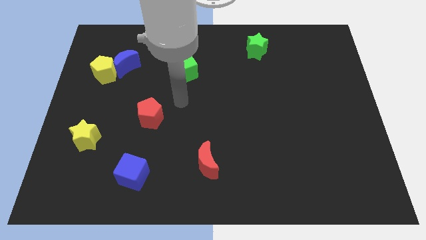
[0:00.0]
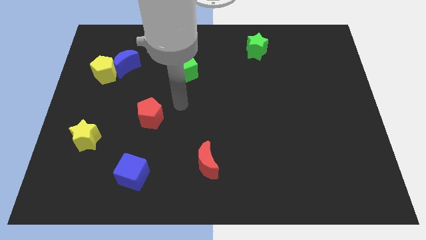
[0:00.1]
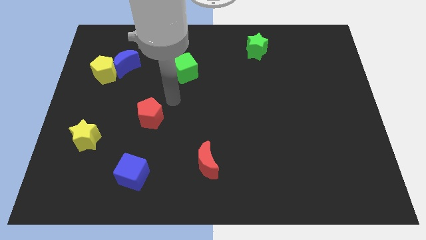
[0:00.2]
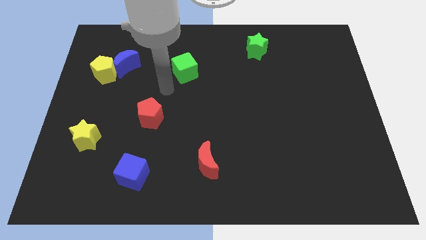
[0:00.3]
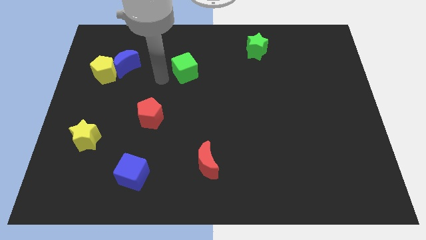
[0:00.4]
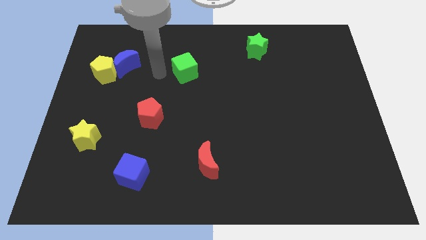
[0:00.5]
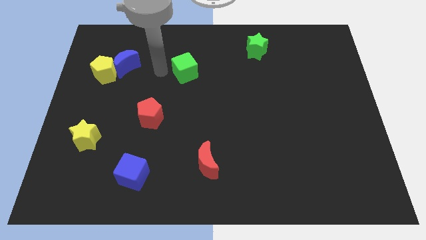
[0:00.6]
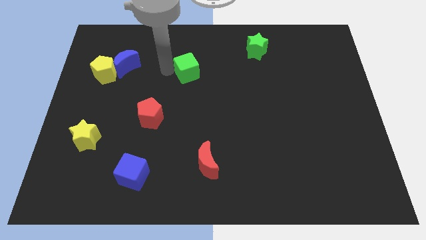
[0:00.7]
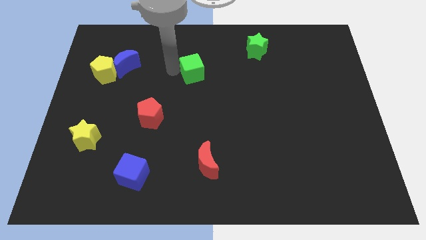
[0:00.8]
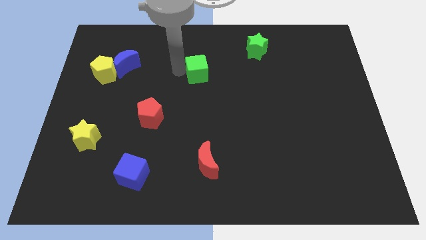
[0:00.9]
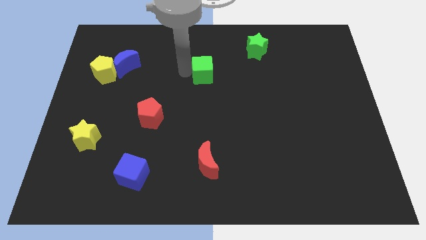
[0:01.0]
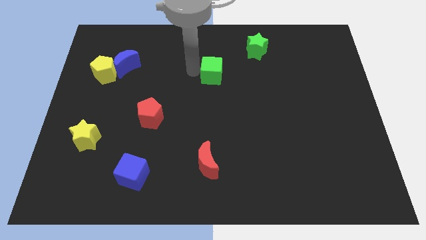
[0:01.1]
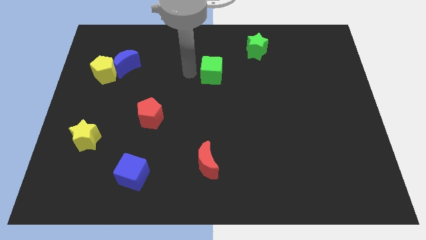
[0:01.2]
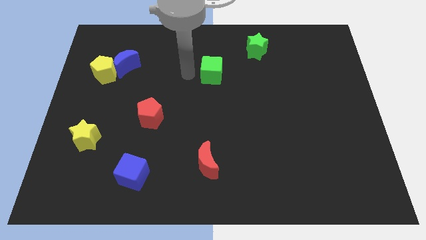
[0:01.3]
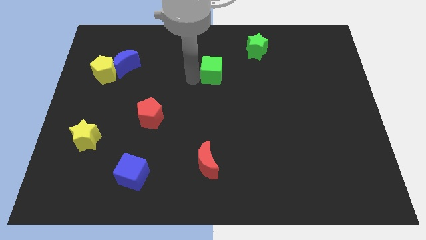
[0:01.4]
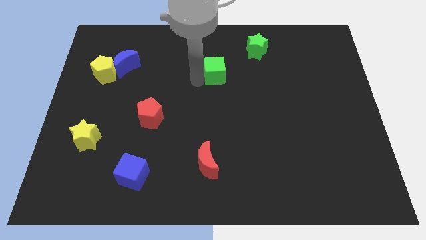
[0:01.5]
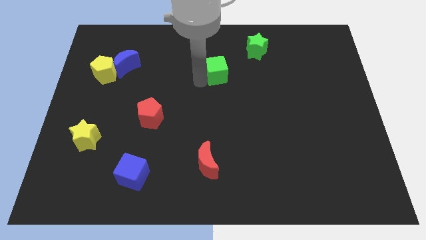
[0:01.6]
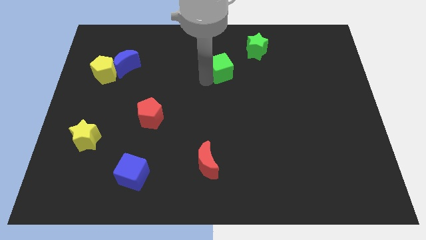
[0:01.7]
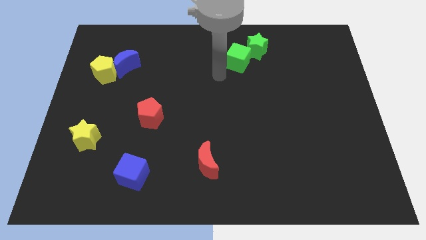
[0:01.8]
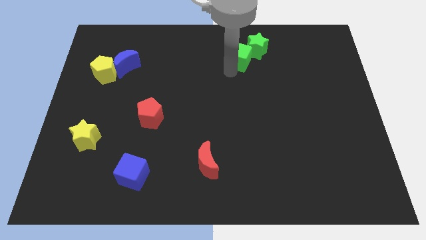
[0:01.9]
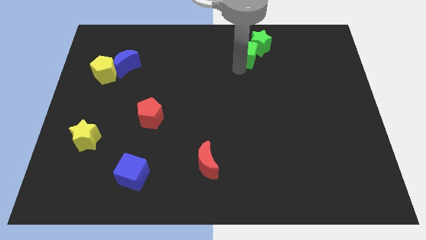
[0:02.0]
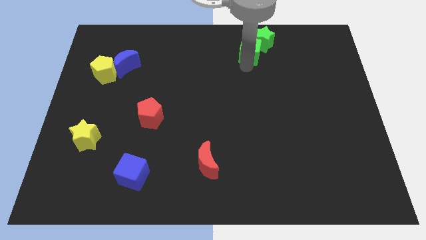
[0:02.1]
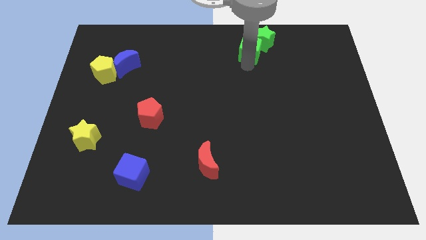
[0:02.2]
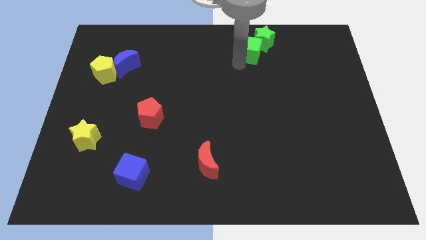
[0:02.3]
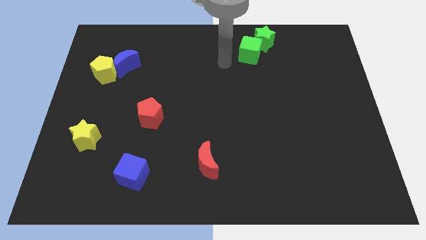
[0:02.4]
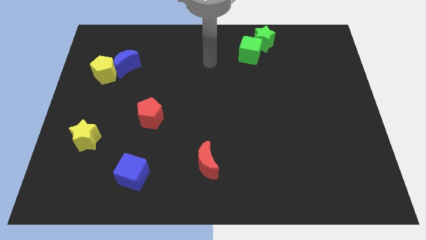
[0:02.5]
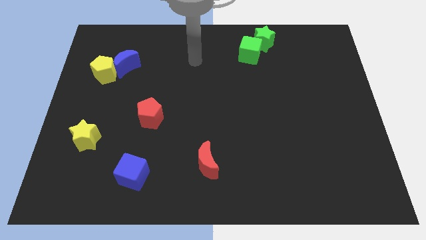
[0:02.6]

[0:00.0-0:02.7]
push the green cube into the green star

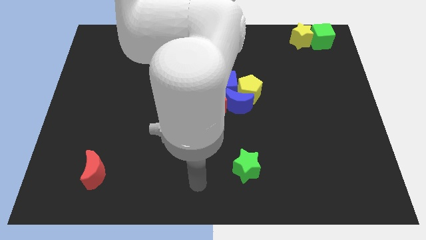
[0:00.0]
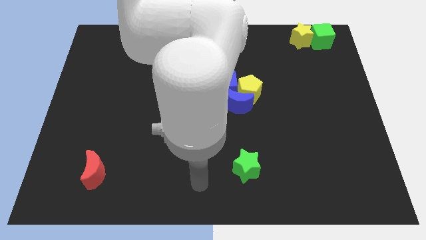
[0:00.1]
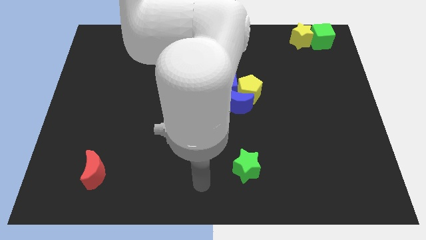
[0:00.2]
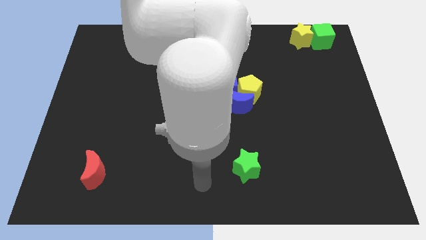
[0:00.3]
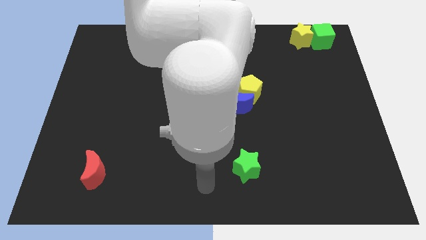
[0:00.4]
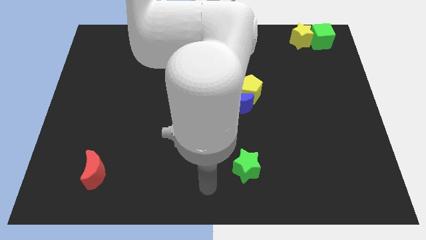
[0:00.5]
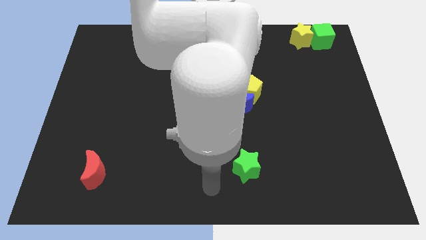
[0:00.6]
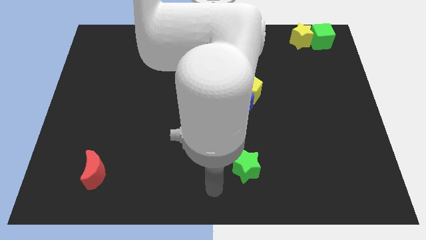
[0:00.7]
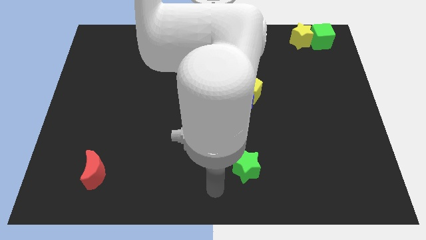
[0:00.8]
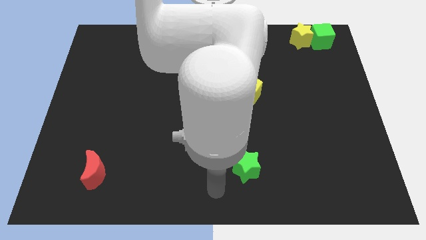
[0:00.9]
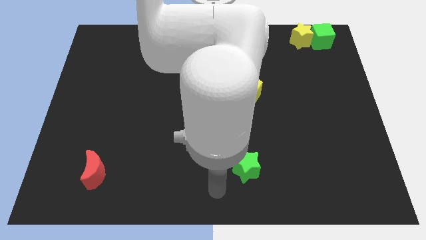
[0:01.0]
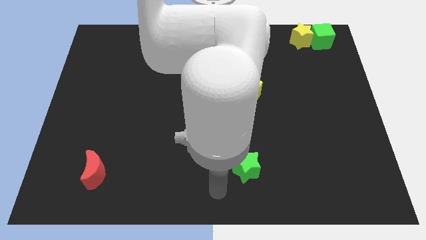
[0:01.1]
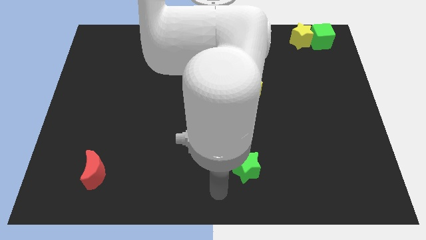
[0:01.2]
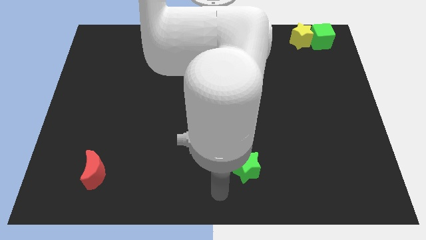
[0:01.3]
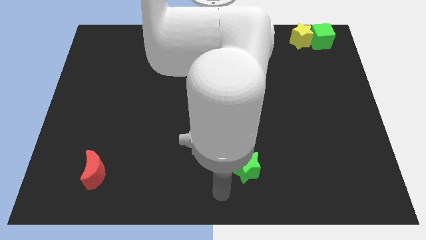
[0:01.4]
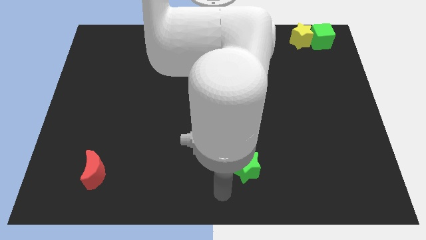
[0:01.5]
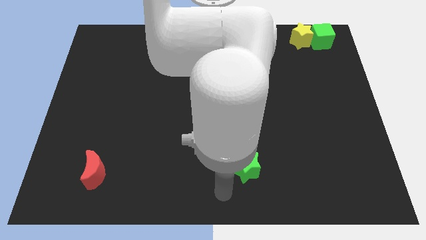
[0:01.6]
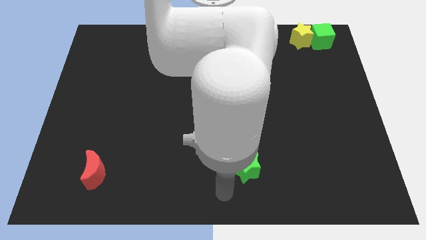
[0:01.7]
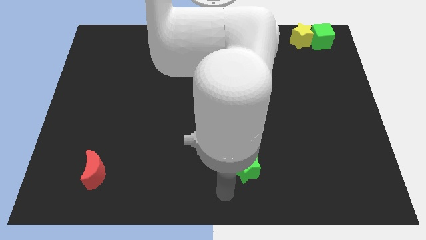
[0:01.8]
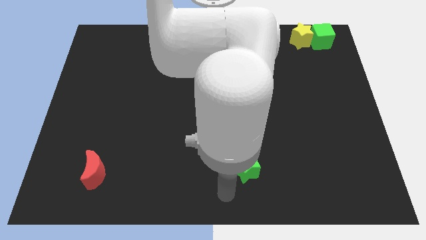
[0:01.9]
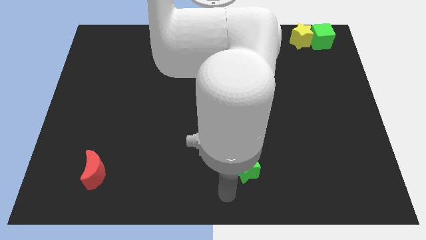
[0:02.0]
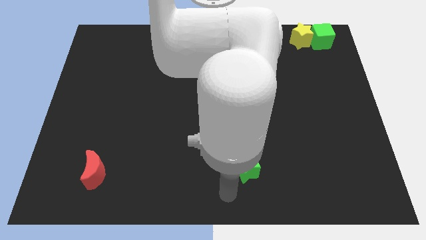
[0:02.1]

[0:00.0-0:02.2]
point your arm at the bottom left side of the green star

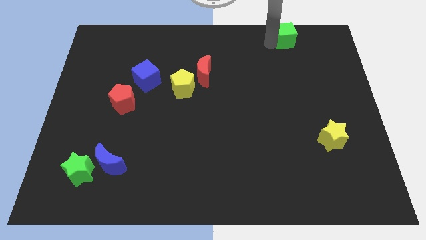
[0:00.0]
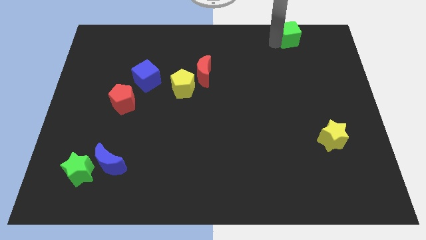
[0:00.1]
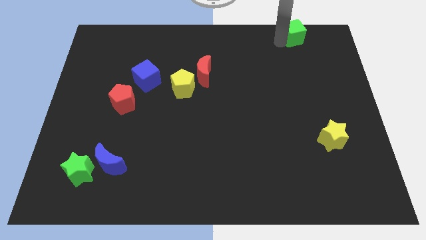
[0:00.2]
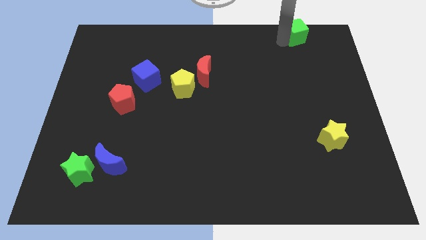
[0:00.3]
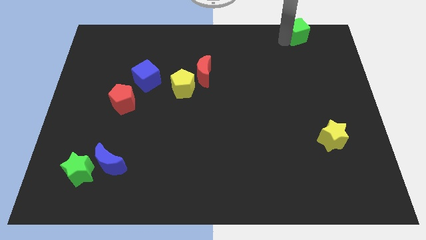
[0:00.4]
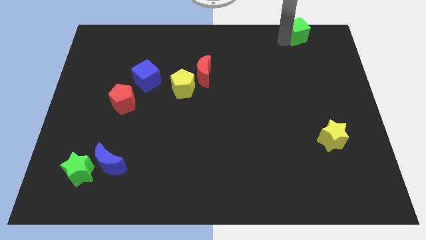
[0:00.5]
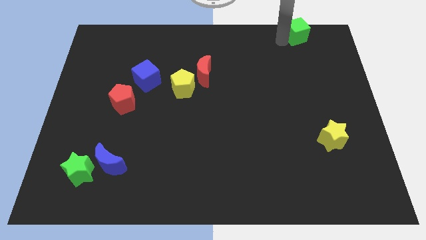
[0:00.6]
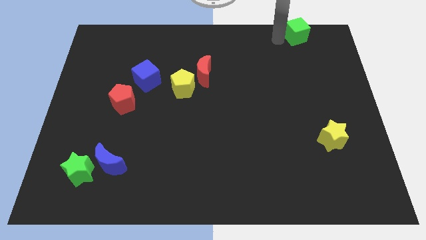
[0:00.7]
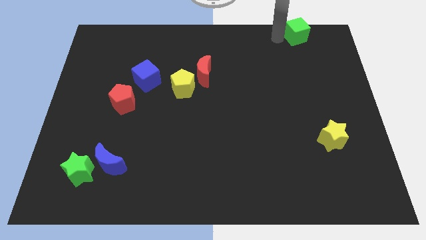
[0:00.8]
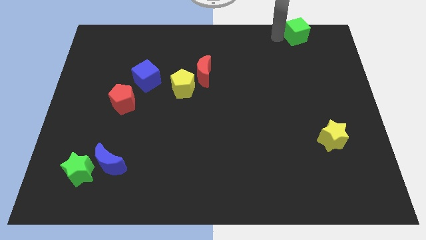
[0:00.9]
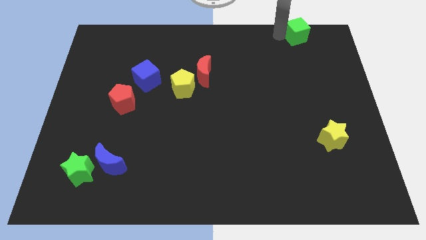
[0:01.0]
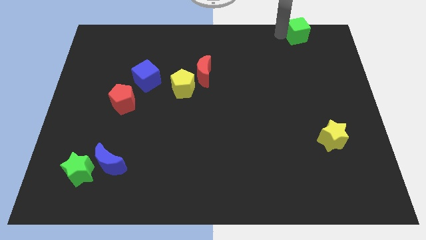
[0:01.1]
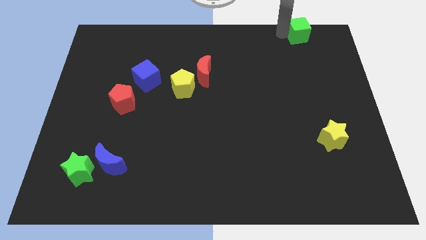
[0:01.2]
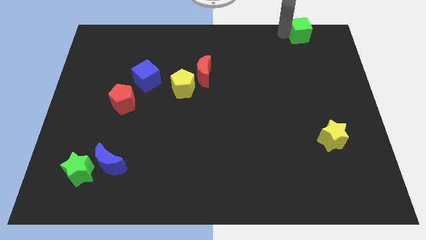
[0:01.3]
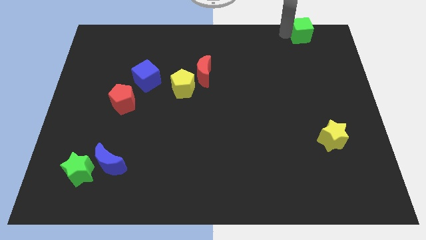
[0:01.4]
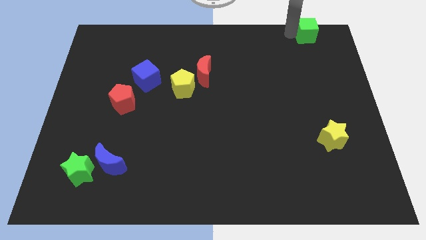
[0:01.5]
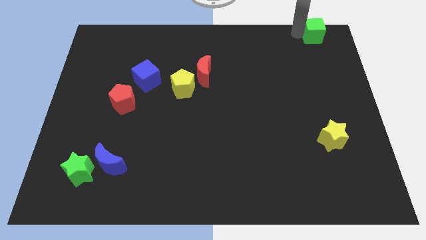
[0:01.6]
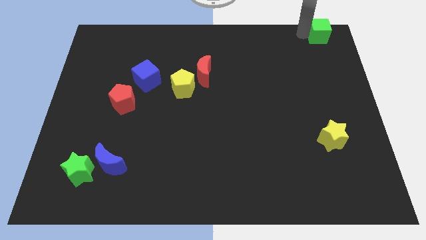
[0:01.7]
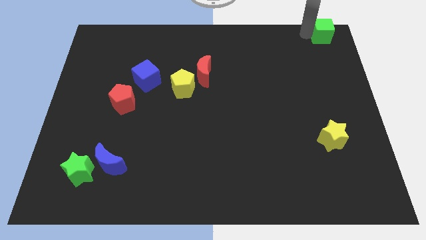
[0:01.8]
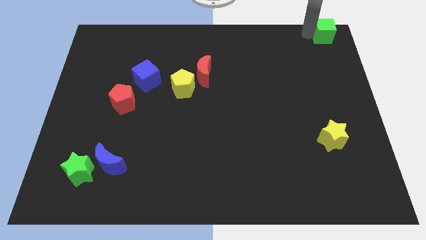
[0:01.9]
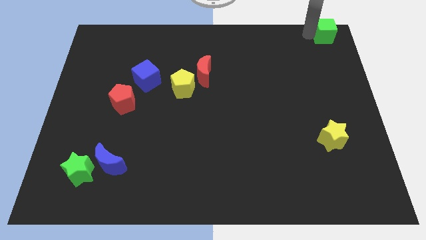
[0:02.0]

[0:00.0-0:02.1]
move the green cube to the top right corner of the board

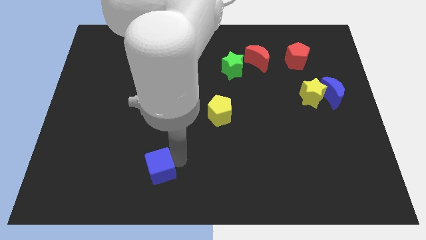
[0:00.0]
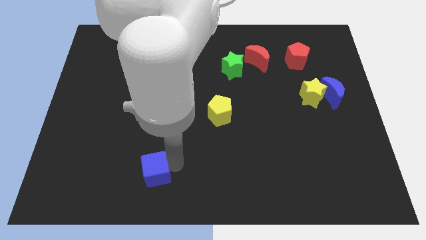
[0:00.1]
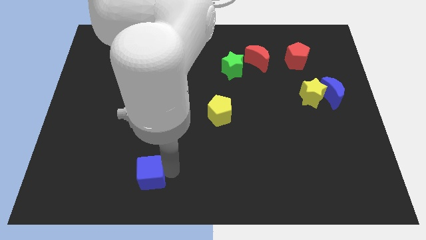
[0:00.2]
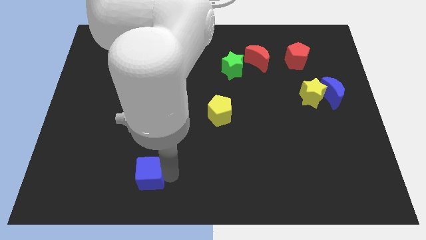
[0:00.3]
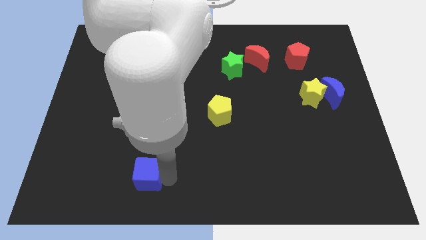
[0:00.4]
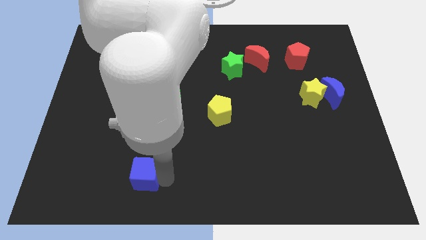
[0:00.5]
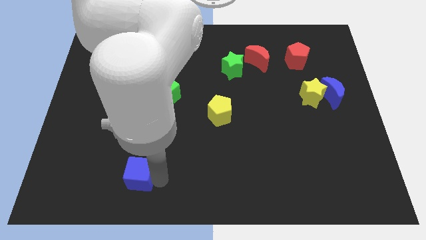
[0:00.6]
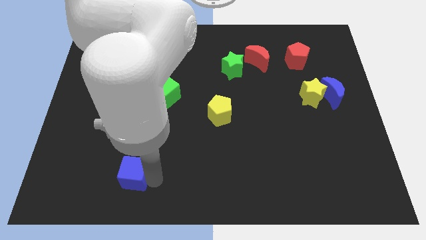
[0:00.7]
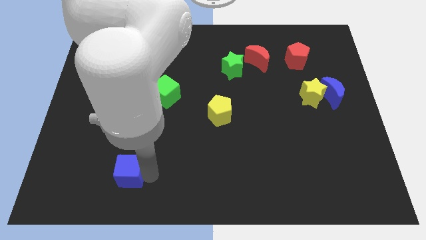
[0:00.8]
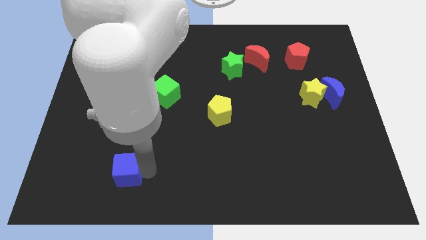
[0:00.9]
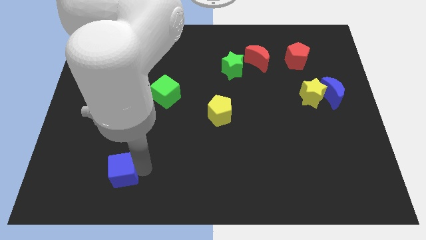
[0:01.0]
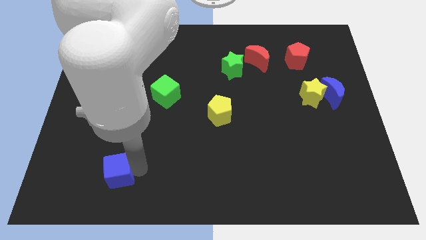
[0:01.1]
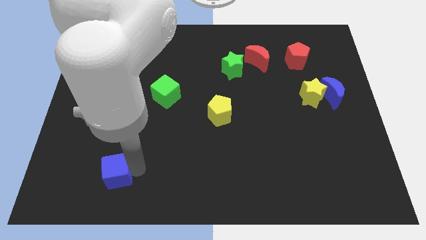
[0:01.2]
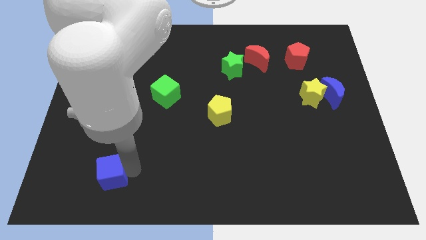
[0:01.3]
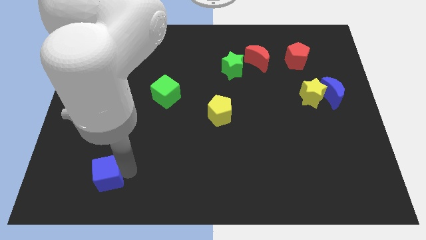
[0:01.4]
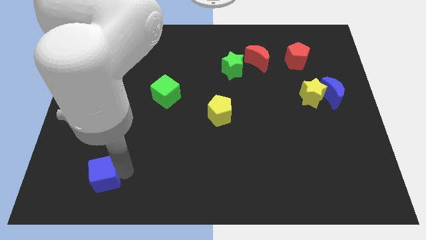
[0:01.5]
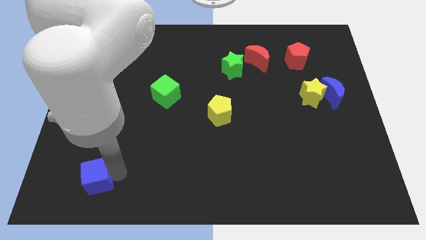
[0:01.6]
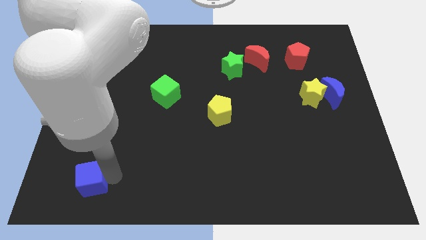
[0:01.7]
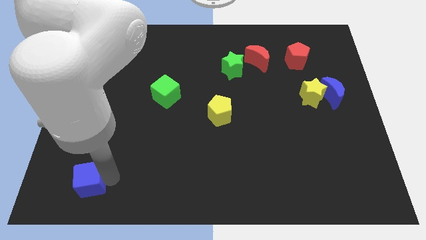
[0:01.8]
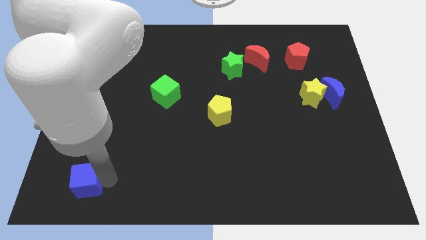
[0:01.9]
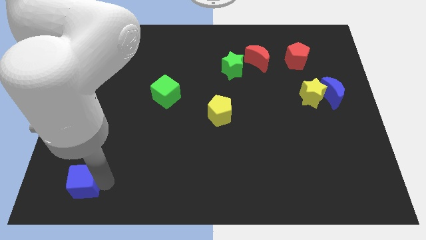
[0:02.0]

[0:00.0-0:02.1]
move blue cube bottom left towards the green cube
